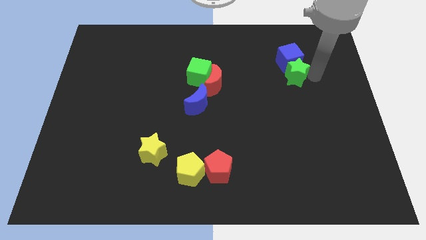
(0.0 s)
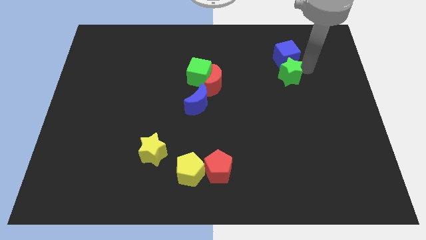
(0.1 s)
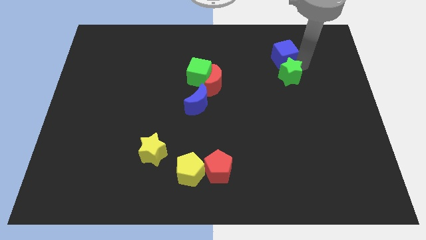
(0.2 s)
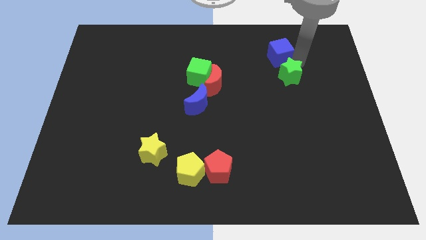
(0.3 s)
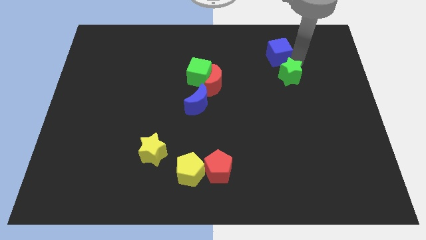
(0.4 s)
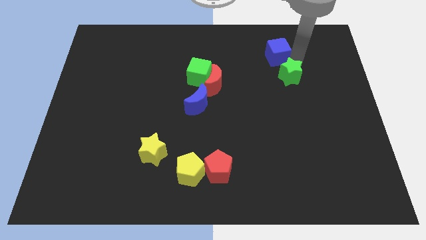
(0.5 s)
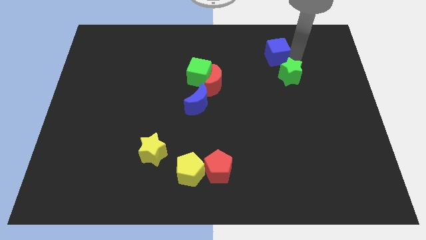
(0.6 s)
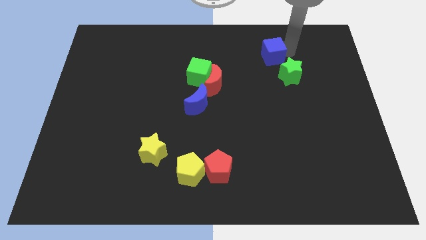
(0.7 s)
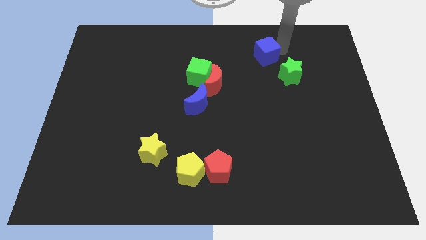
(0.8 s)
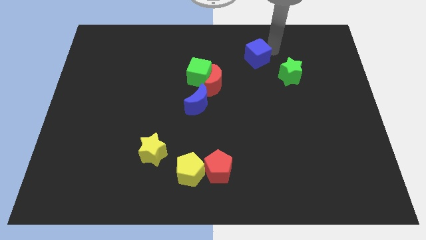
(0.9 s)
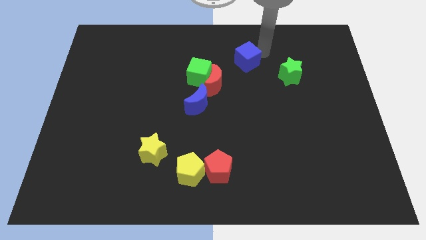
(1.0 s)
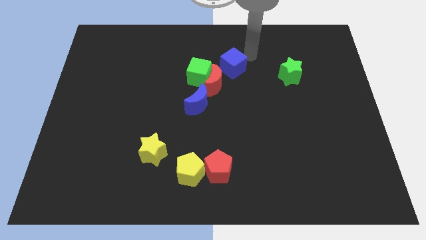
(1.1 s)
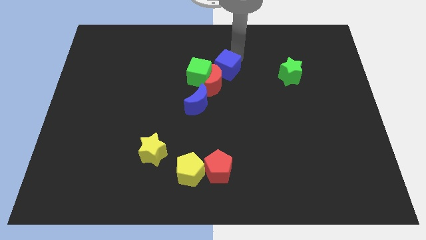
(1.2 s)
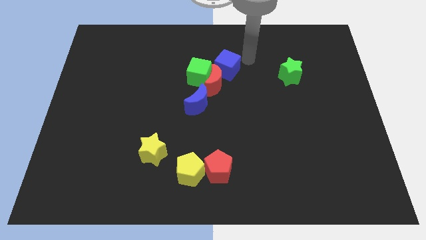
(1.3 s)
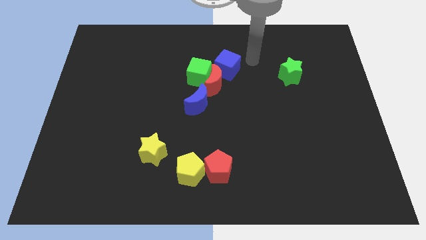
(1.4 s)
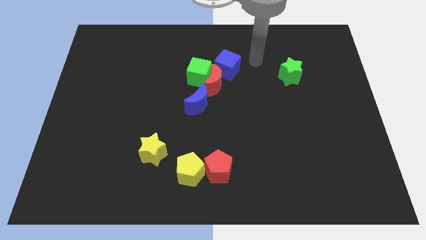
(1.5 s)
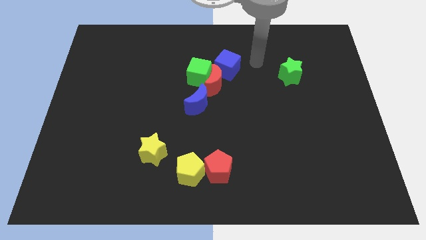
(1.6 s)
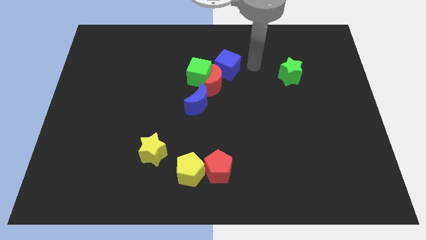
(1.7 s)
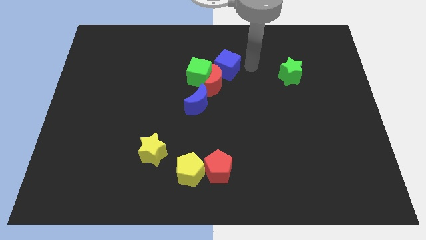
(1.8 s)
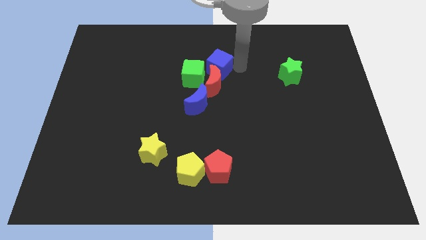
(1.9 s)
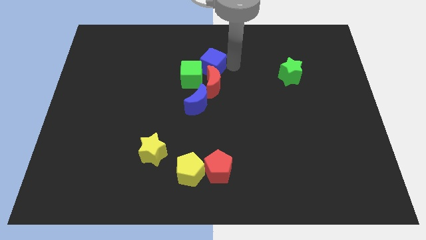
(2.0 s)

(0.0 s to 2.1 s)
place the blue cube at the top of red moon

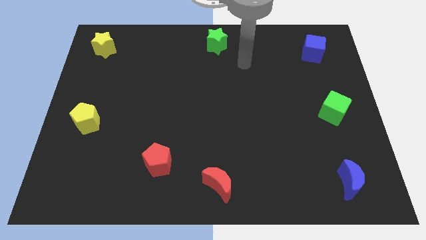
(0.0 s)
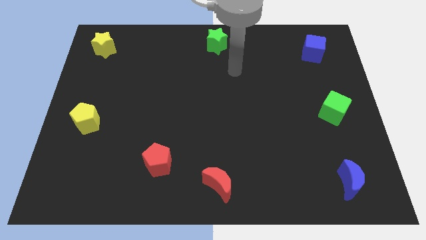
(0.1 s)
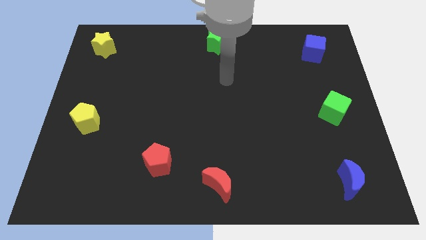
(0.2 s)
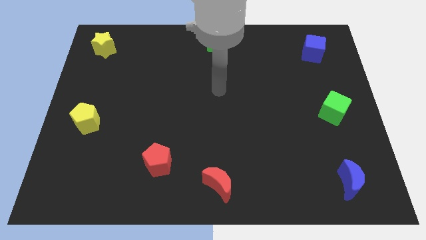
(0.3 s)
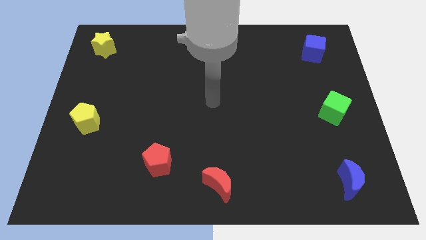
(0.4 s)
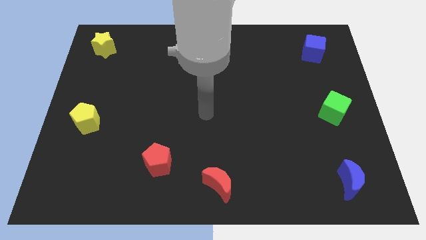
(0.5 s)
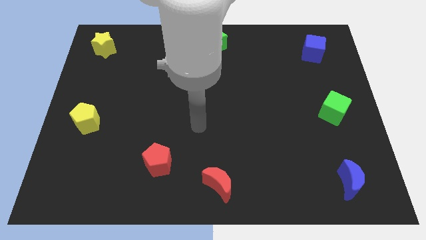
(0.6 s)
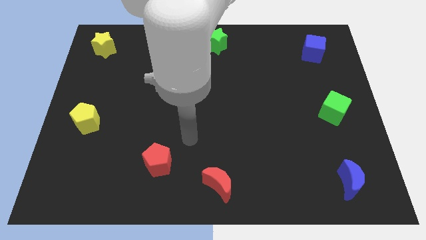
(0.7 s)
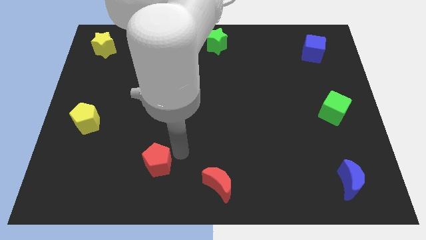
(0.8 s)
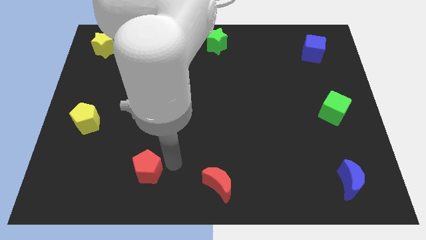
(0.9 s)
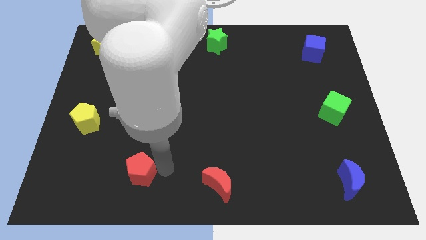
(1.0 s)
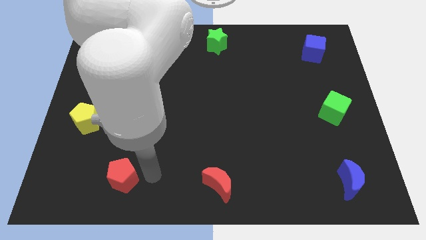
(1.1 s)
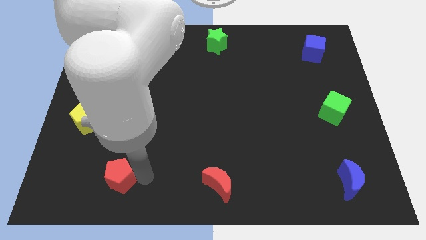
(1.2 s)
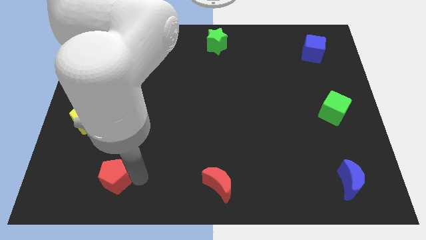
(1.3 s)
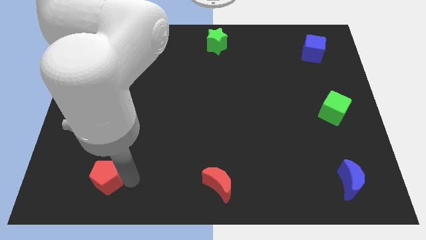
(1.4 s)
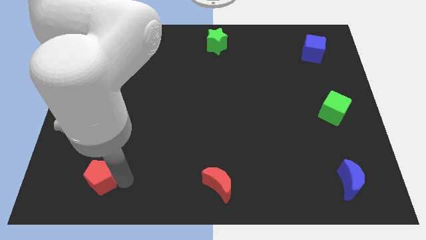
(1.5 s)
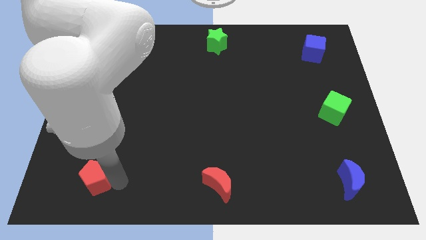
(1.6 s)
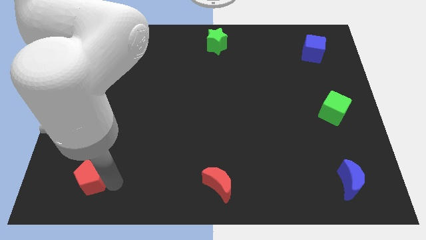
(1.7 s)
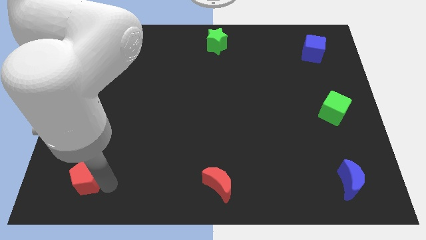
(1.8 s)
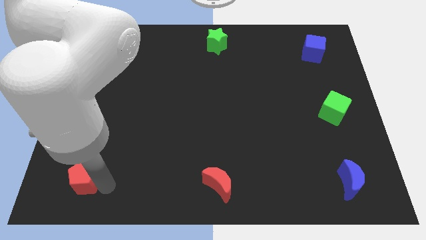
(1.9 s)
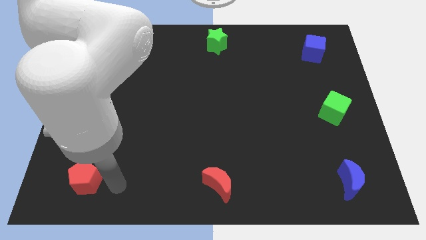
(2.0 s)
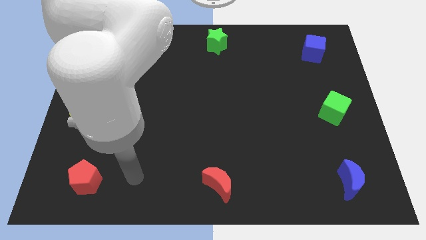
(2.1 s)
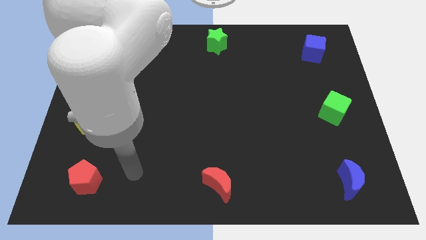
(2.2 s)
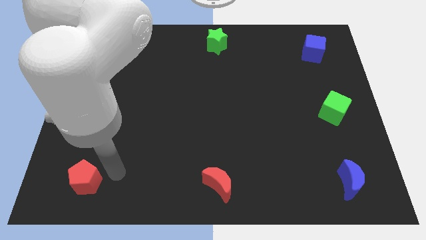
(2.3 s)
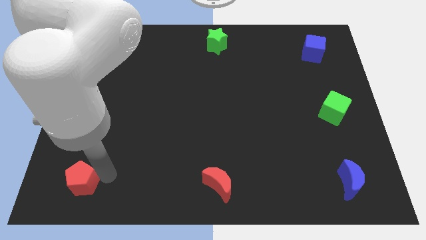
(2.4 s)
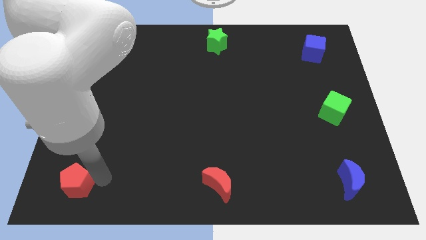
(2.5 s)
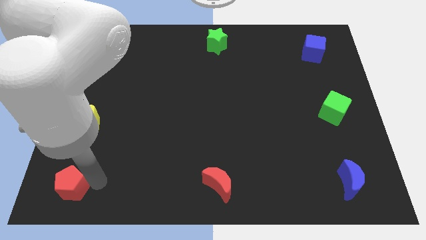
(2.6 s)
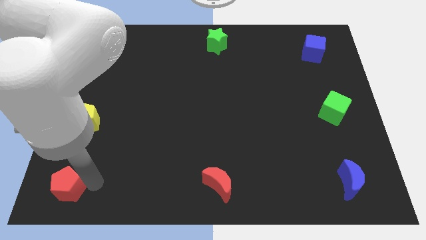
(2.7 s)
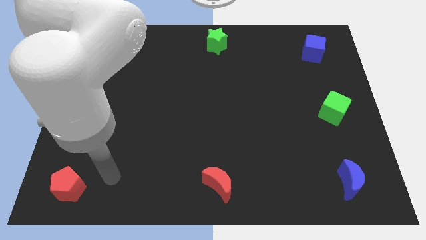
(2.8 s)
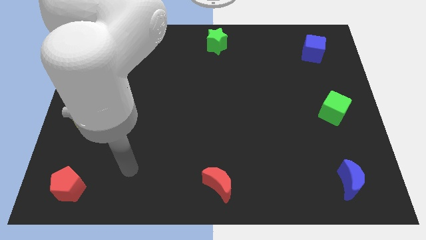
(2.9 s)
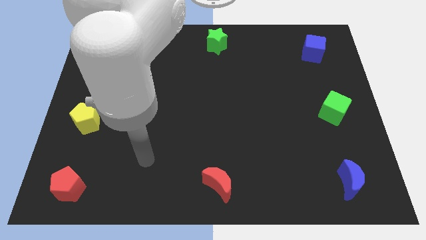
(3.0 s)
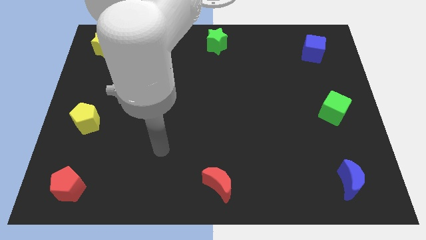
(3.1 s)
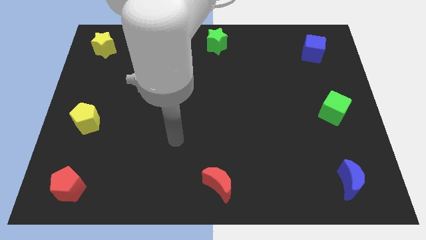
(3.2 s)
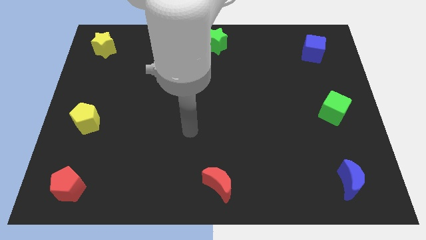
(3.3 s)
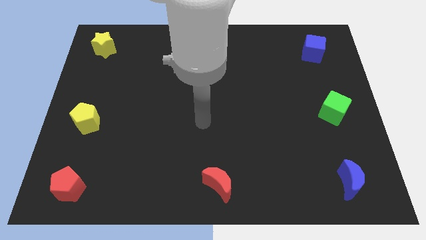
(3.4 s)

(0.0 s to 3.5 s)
place the red pentagon below the yellow pentagon

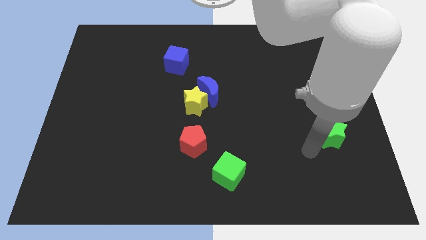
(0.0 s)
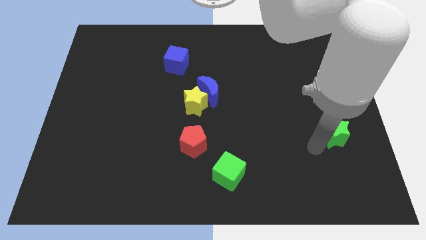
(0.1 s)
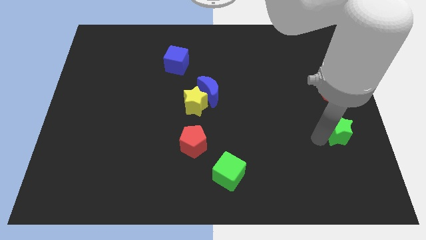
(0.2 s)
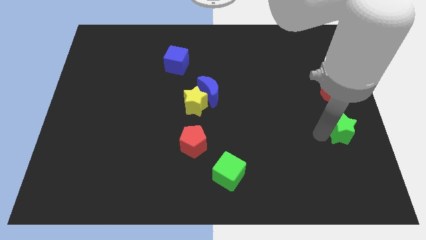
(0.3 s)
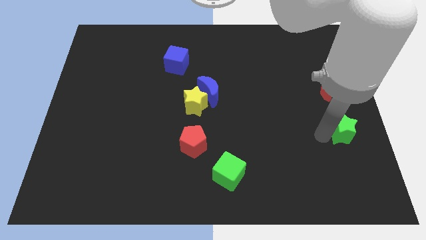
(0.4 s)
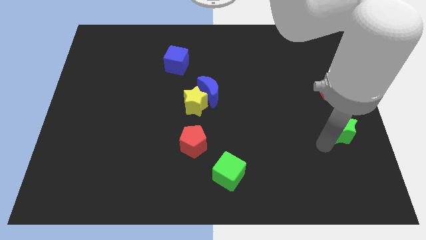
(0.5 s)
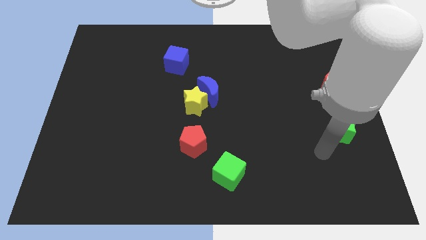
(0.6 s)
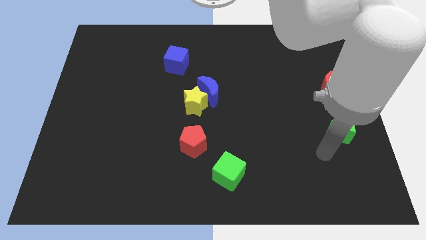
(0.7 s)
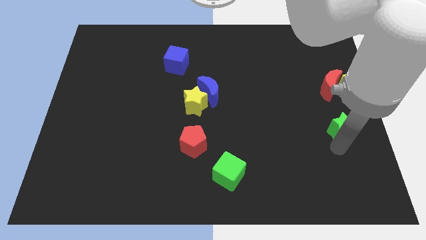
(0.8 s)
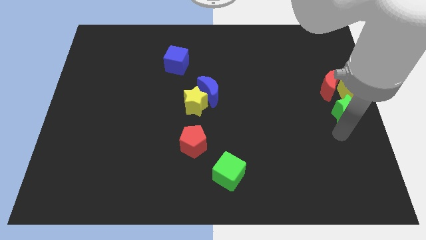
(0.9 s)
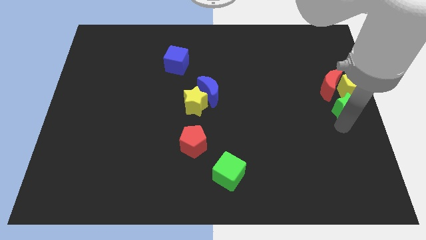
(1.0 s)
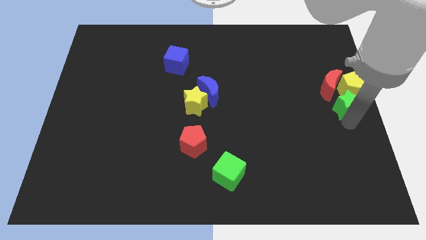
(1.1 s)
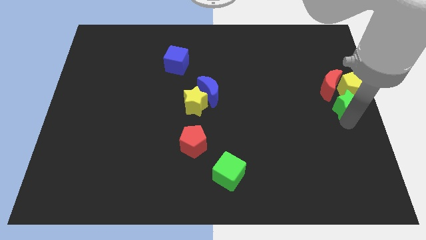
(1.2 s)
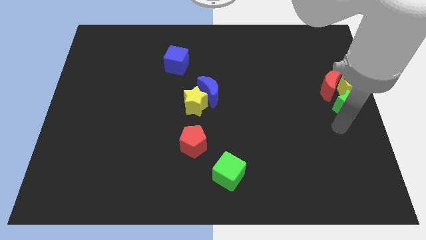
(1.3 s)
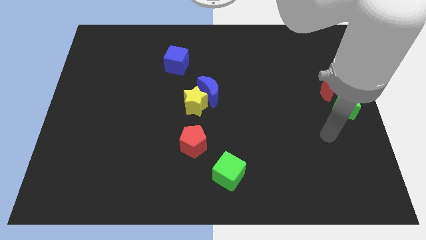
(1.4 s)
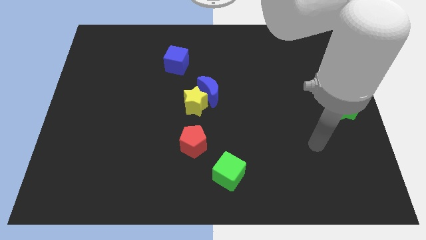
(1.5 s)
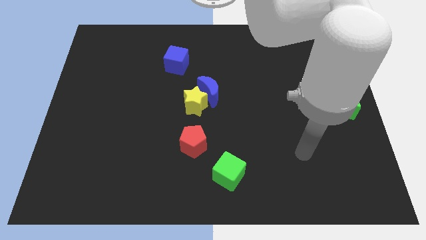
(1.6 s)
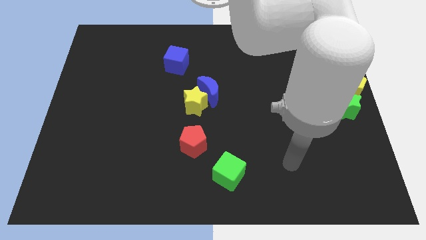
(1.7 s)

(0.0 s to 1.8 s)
place the green star to the bottom of yellow pentagon

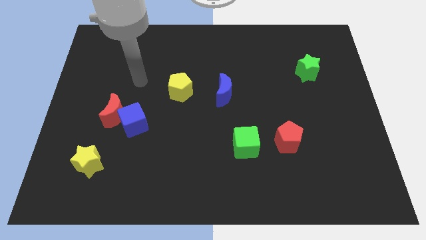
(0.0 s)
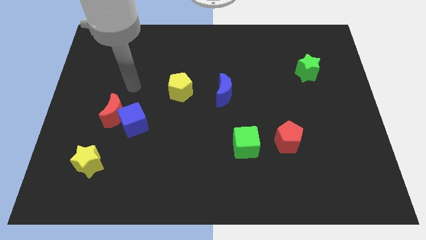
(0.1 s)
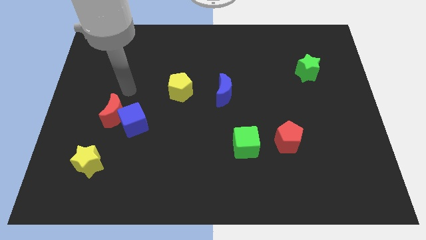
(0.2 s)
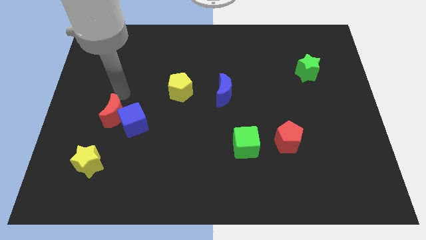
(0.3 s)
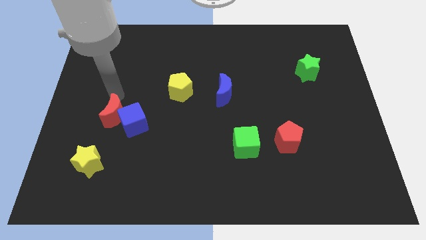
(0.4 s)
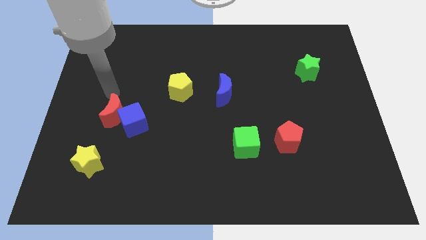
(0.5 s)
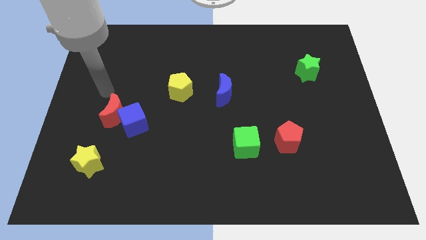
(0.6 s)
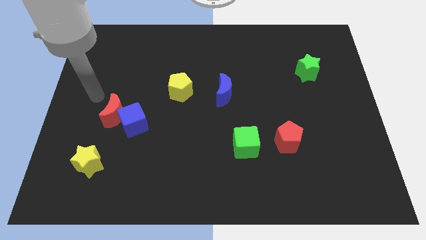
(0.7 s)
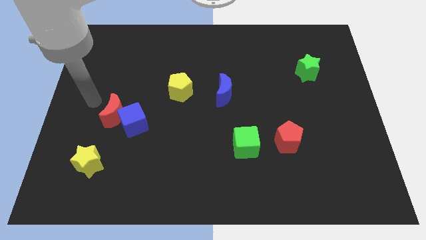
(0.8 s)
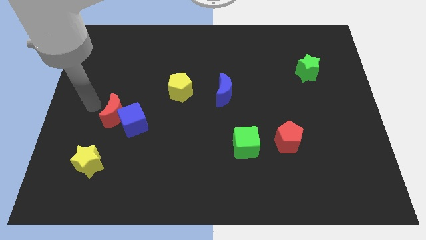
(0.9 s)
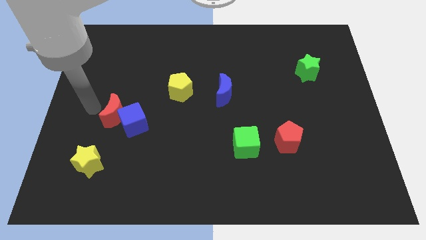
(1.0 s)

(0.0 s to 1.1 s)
place your arm left to red moon

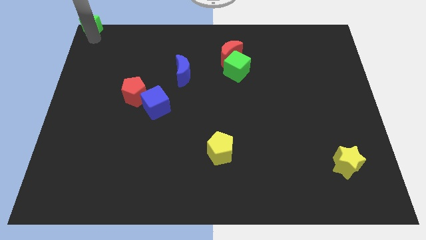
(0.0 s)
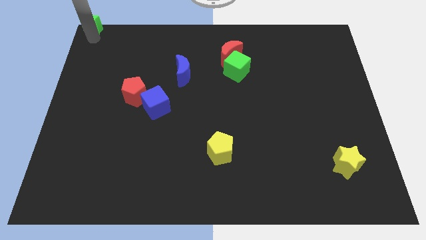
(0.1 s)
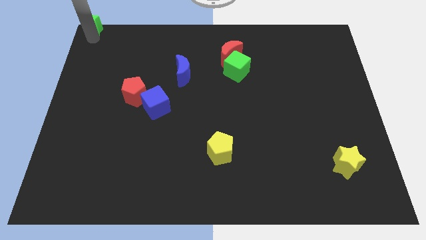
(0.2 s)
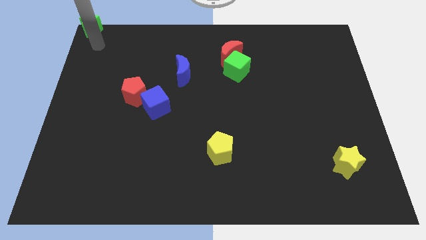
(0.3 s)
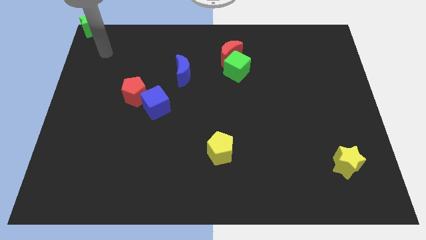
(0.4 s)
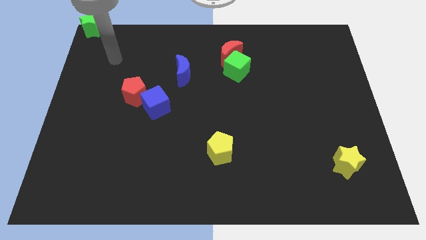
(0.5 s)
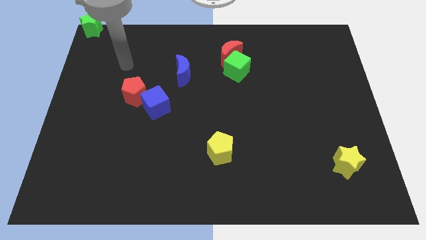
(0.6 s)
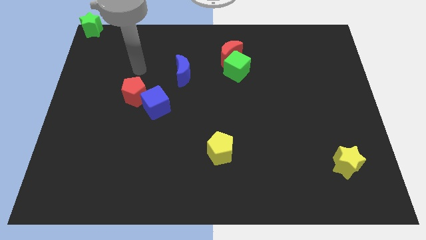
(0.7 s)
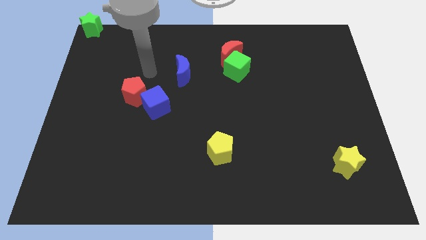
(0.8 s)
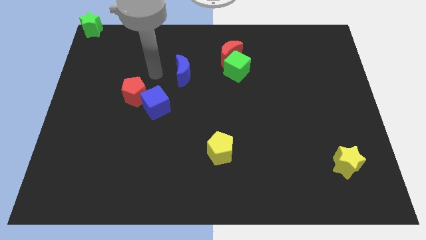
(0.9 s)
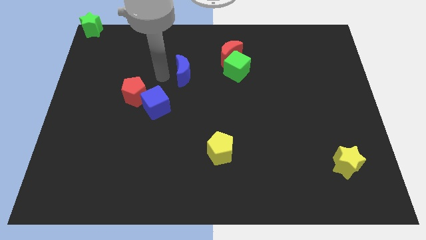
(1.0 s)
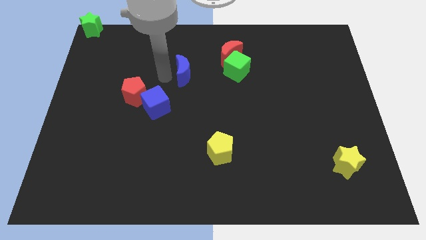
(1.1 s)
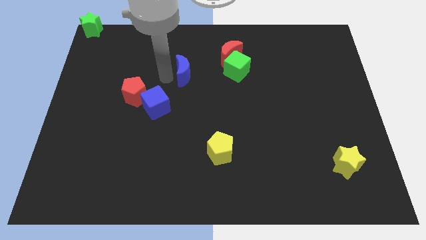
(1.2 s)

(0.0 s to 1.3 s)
move your arm to the left of blue moon
